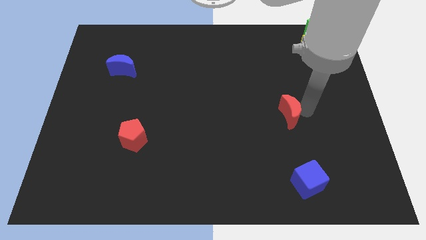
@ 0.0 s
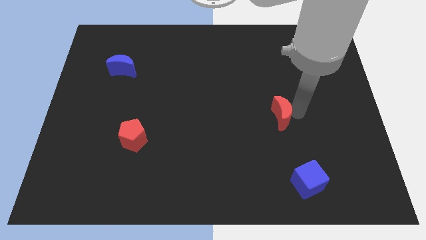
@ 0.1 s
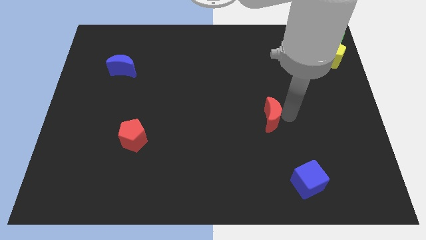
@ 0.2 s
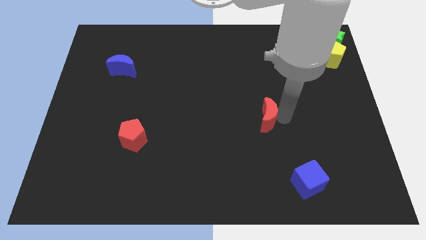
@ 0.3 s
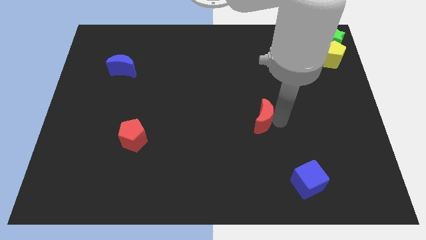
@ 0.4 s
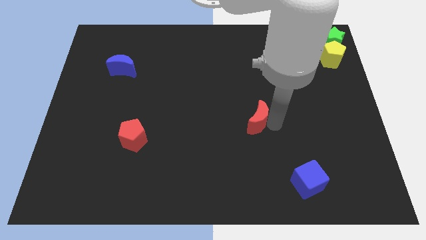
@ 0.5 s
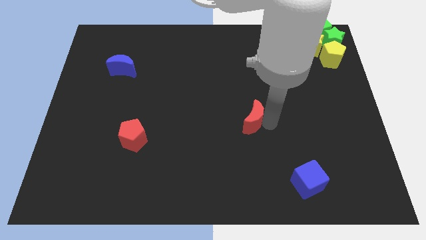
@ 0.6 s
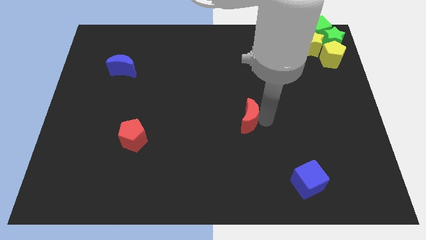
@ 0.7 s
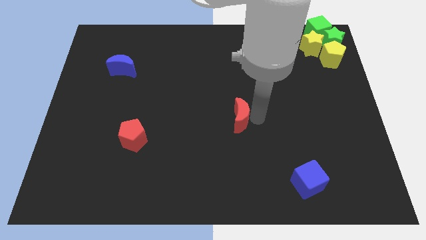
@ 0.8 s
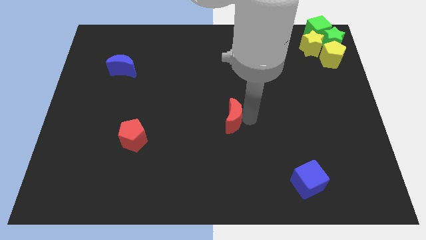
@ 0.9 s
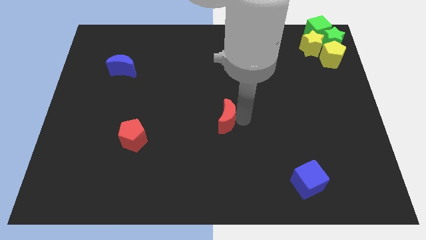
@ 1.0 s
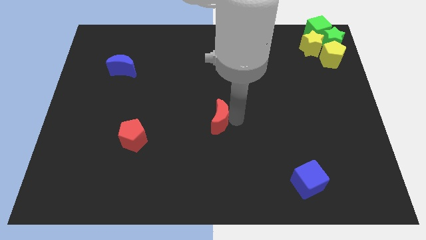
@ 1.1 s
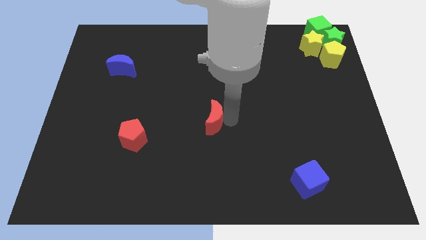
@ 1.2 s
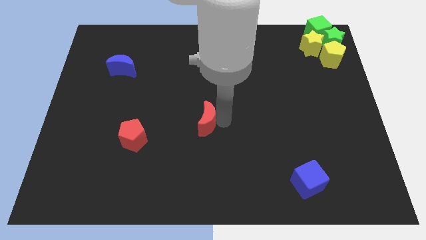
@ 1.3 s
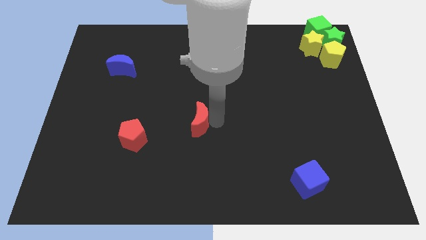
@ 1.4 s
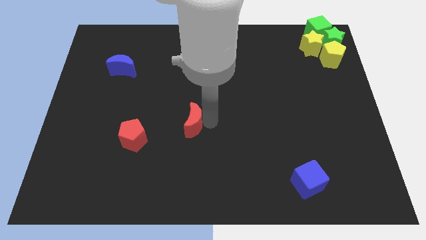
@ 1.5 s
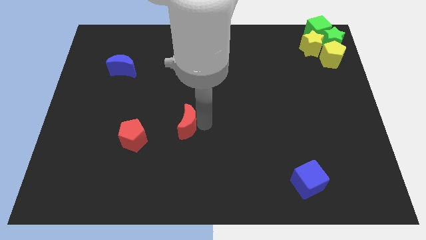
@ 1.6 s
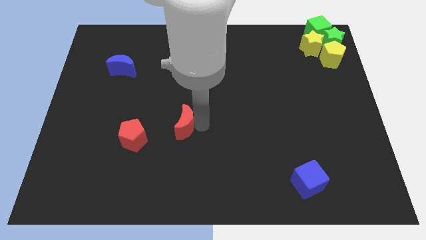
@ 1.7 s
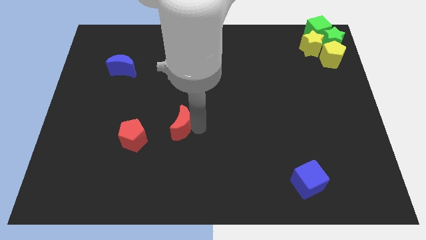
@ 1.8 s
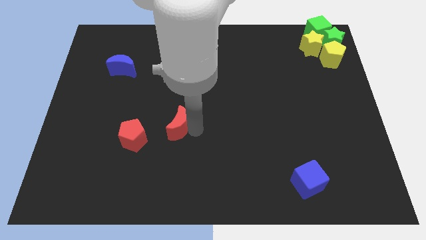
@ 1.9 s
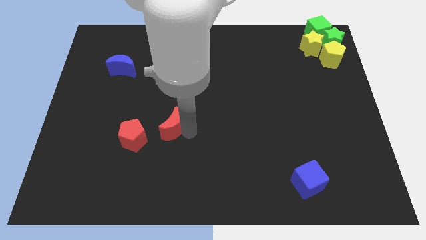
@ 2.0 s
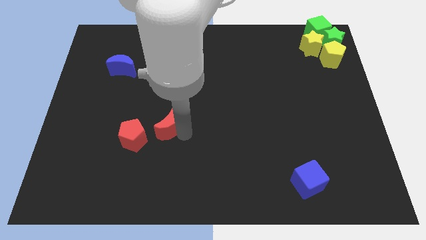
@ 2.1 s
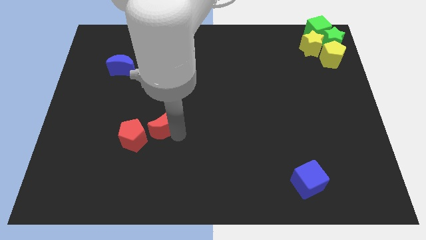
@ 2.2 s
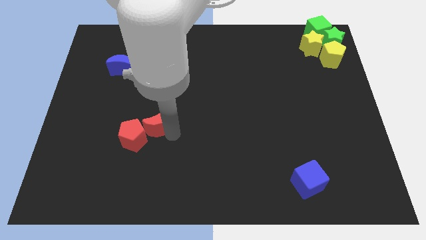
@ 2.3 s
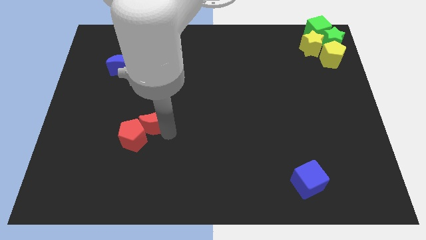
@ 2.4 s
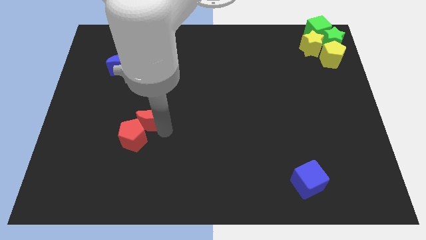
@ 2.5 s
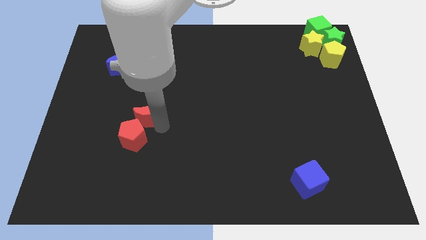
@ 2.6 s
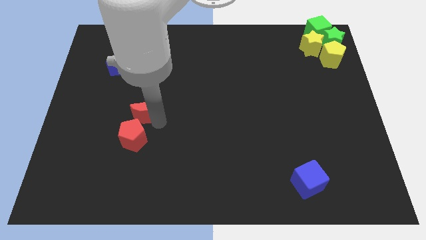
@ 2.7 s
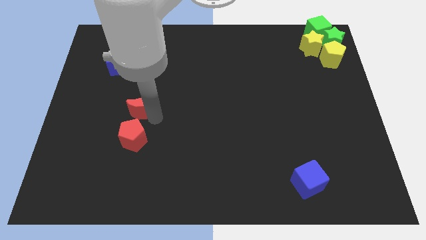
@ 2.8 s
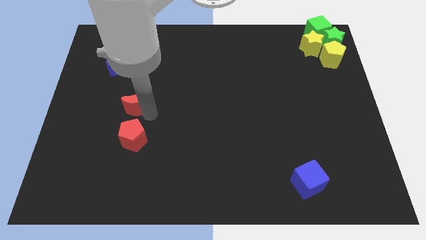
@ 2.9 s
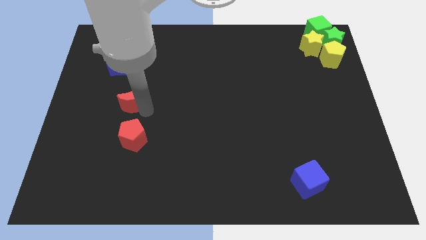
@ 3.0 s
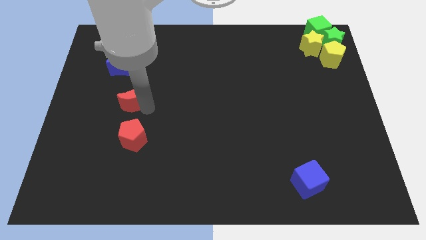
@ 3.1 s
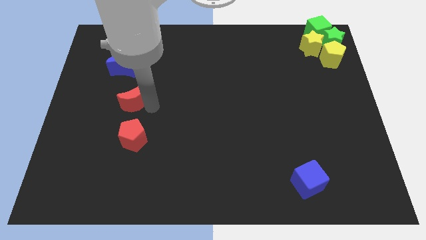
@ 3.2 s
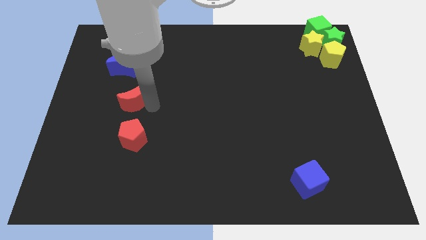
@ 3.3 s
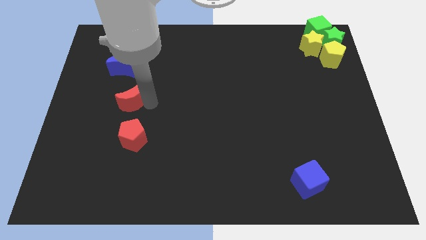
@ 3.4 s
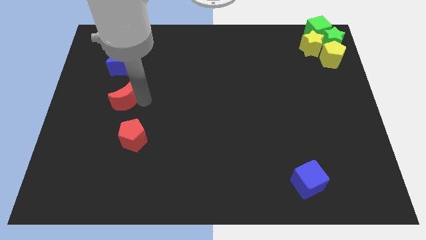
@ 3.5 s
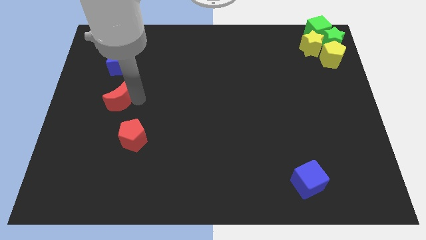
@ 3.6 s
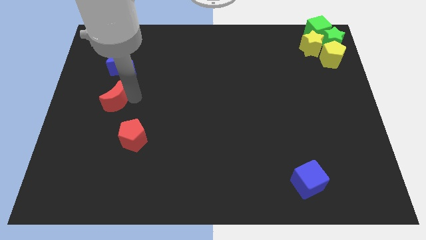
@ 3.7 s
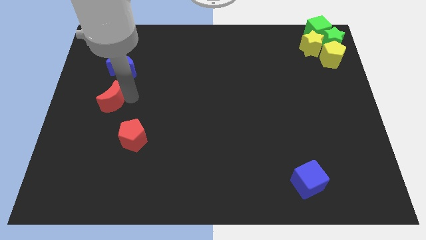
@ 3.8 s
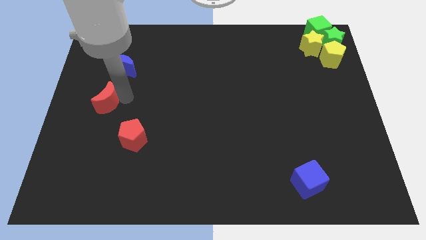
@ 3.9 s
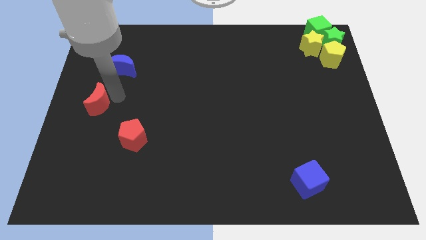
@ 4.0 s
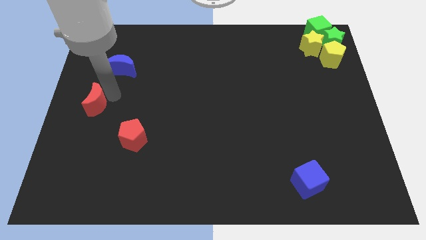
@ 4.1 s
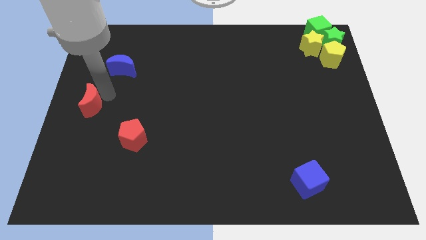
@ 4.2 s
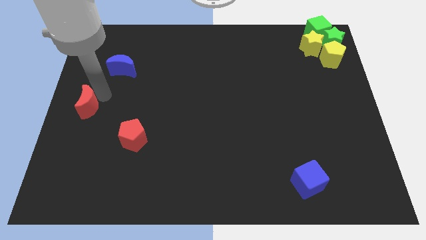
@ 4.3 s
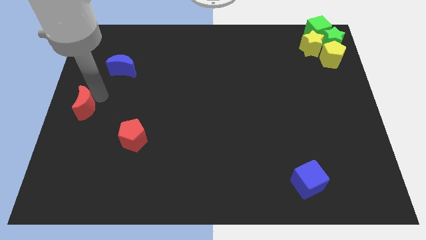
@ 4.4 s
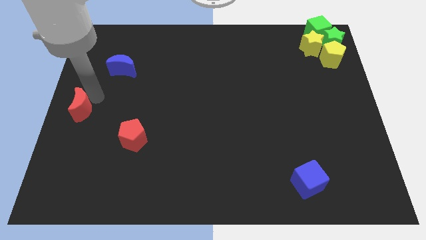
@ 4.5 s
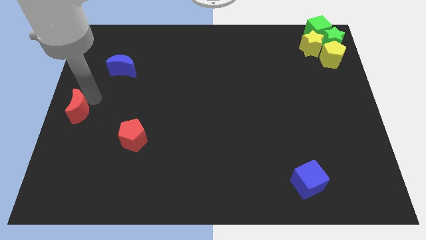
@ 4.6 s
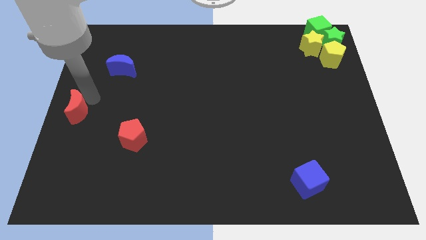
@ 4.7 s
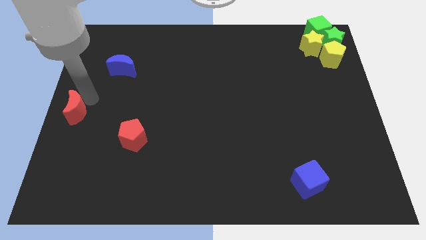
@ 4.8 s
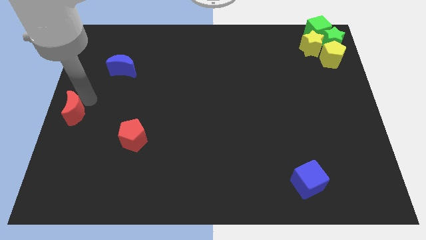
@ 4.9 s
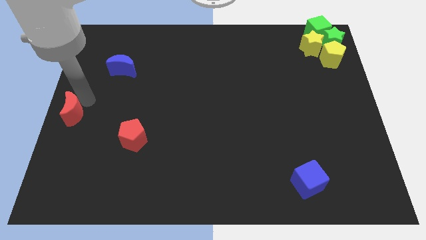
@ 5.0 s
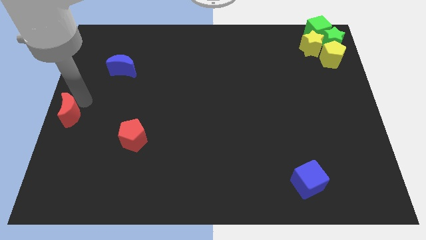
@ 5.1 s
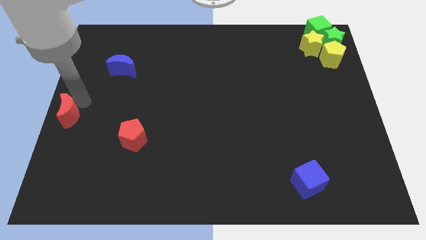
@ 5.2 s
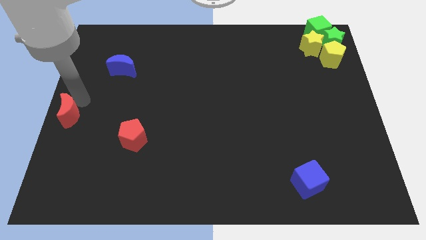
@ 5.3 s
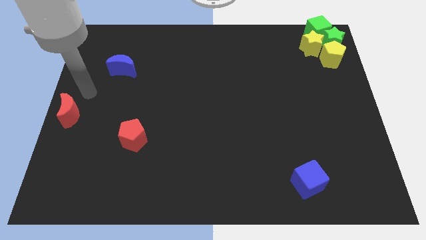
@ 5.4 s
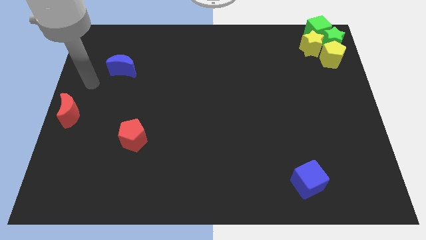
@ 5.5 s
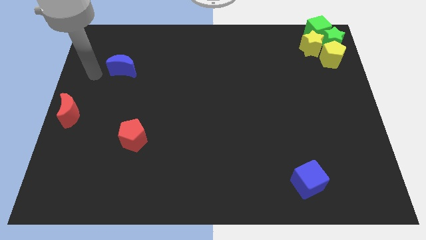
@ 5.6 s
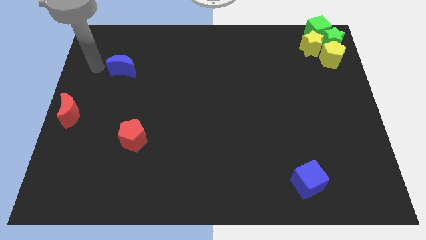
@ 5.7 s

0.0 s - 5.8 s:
push the red crescent to the left middle of the board

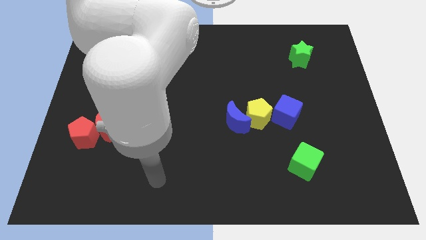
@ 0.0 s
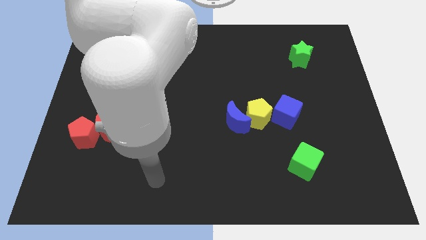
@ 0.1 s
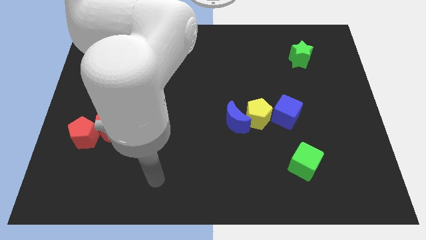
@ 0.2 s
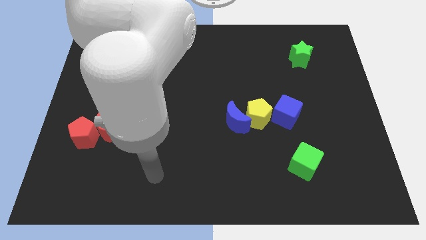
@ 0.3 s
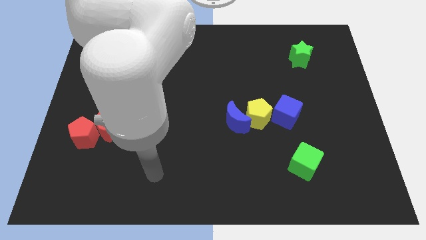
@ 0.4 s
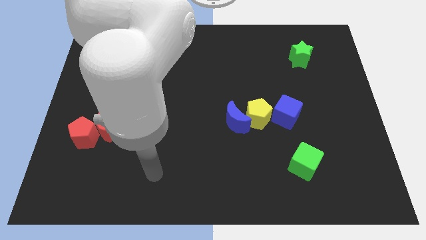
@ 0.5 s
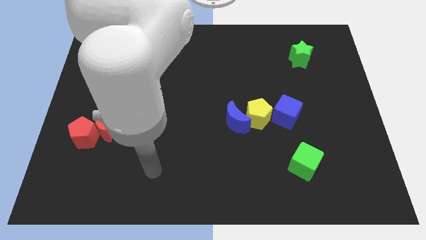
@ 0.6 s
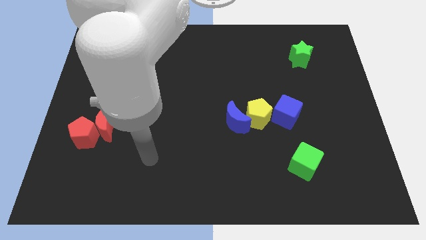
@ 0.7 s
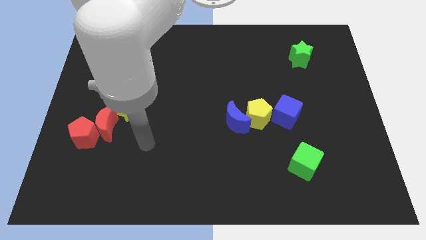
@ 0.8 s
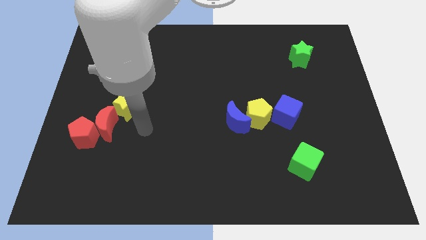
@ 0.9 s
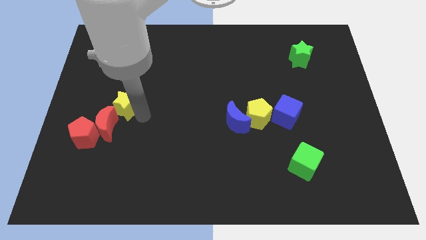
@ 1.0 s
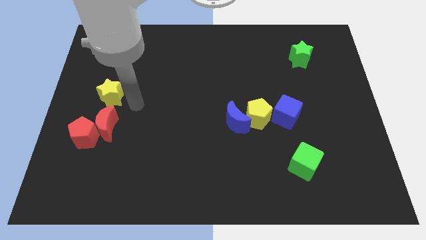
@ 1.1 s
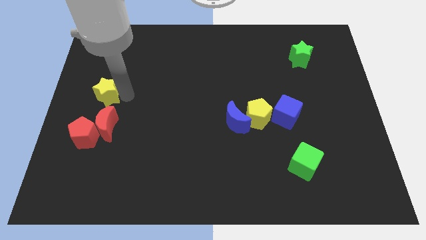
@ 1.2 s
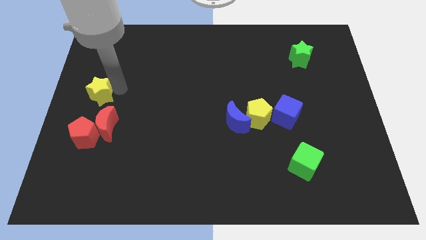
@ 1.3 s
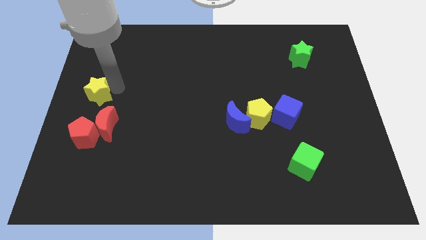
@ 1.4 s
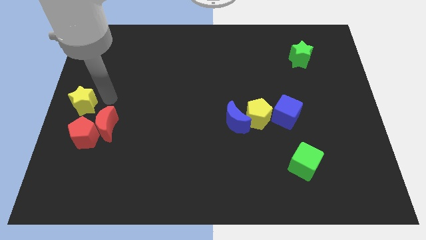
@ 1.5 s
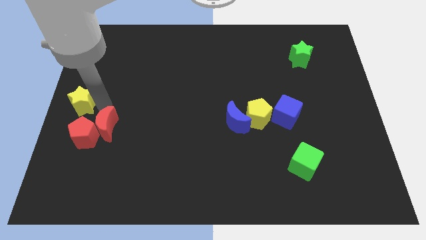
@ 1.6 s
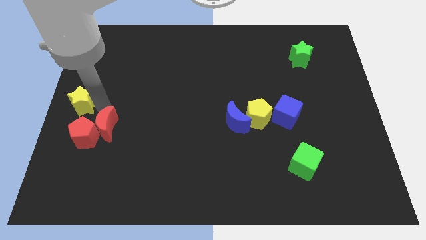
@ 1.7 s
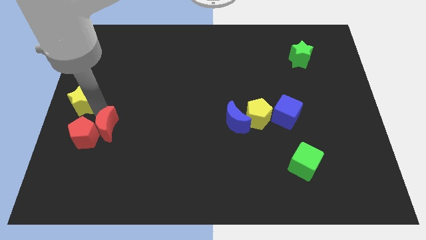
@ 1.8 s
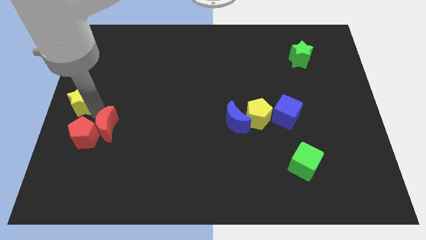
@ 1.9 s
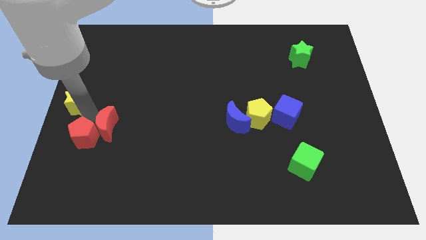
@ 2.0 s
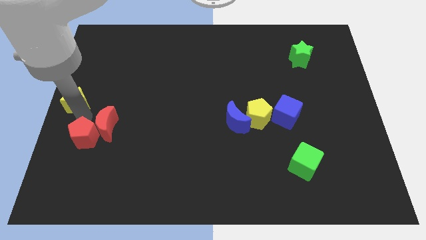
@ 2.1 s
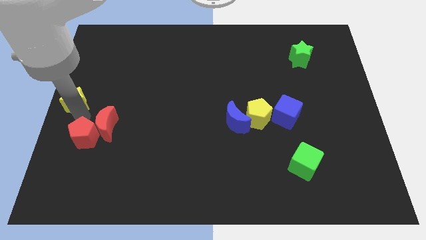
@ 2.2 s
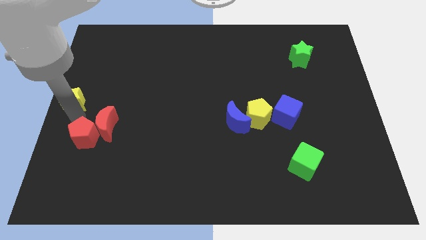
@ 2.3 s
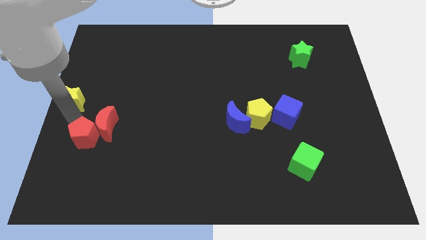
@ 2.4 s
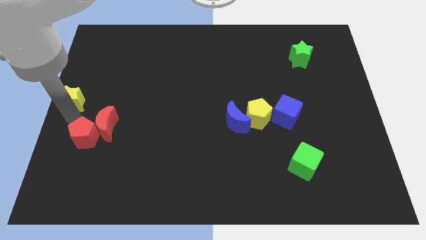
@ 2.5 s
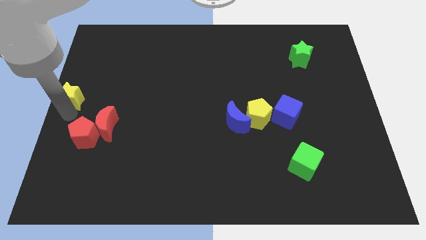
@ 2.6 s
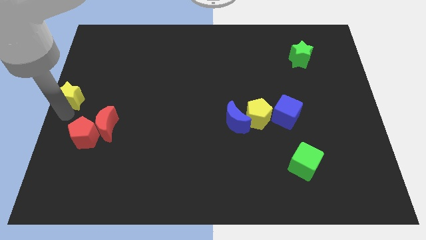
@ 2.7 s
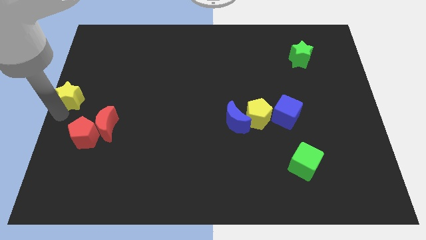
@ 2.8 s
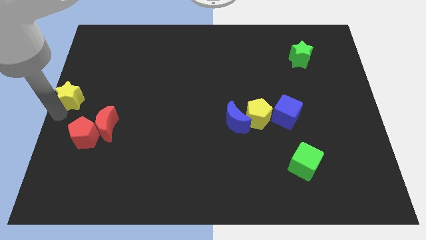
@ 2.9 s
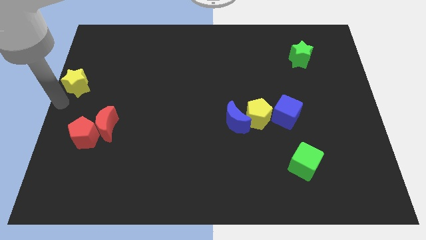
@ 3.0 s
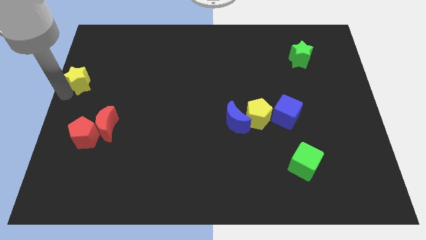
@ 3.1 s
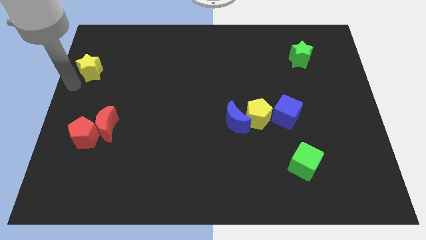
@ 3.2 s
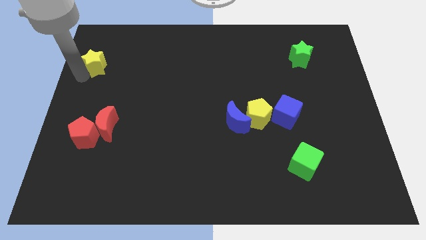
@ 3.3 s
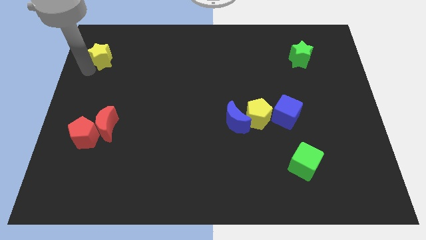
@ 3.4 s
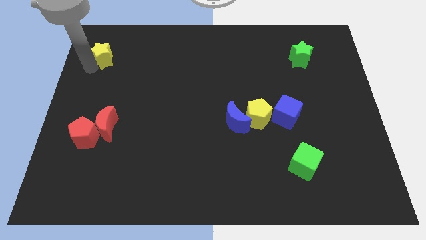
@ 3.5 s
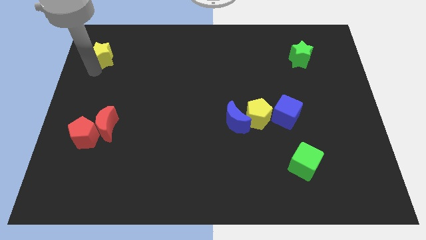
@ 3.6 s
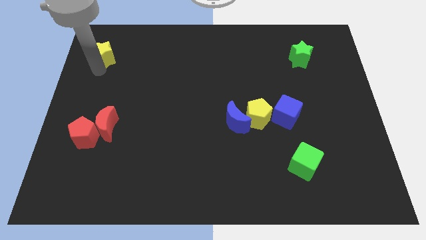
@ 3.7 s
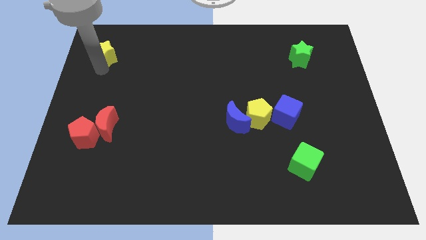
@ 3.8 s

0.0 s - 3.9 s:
put the yellow star to the left of the green star
